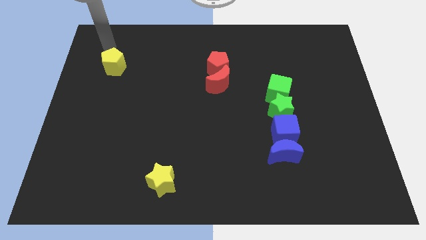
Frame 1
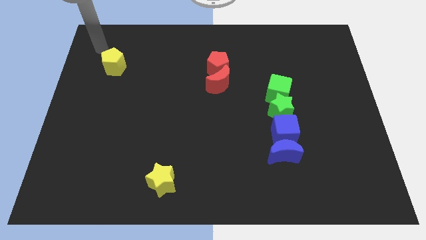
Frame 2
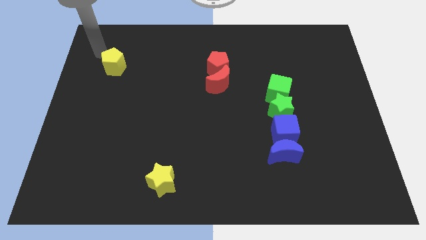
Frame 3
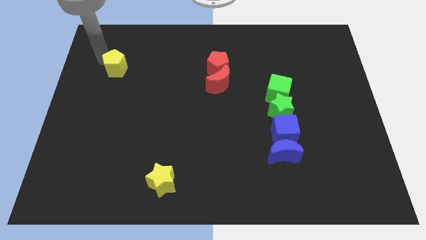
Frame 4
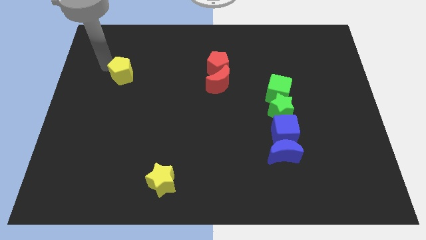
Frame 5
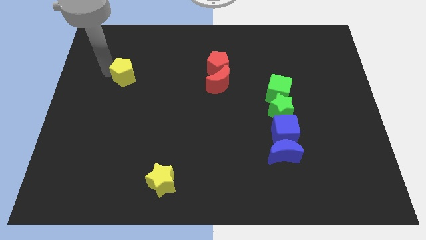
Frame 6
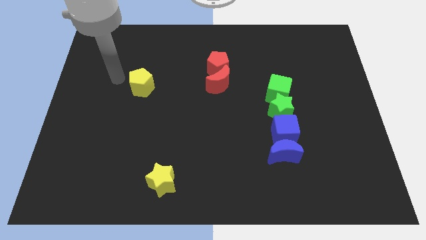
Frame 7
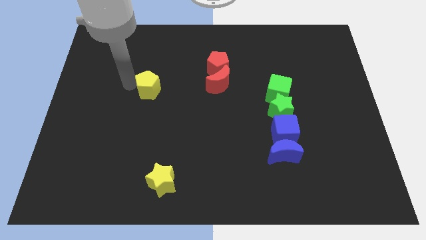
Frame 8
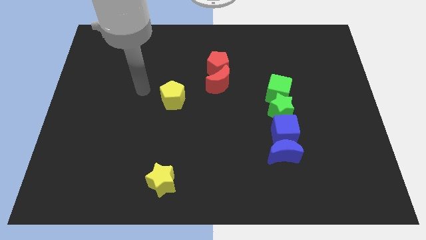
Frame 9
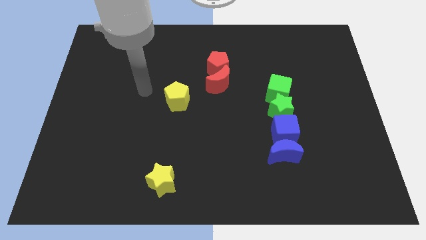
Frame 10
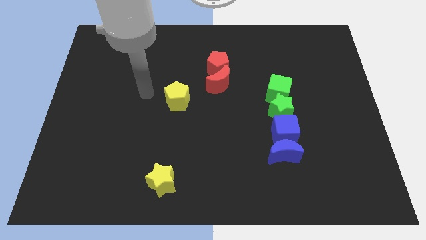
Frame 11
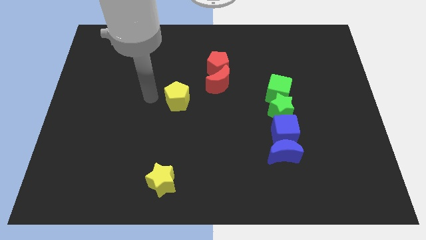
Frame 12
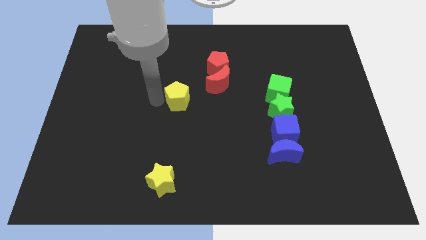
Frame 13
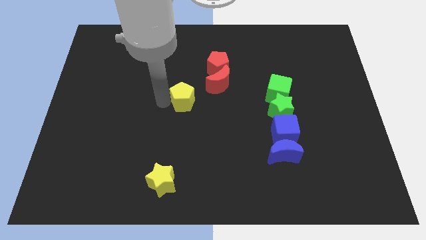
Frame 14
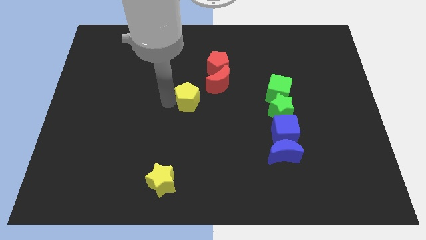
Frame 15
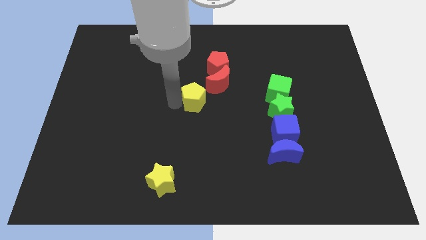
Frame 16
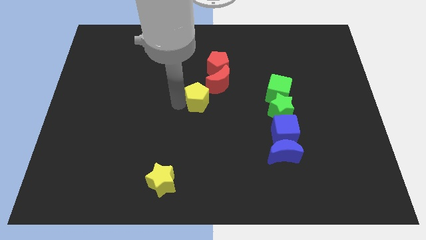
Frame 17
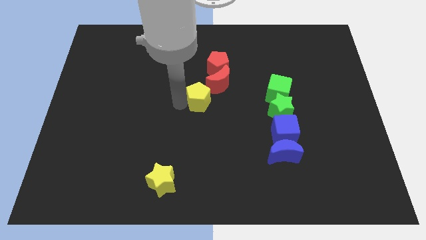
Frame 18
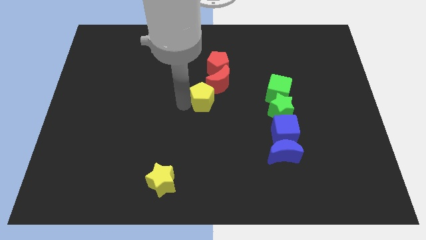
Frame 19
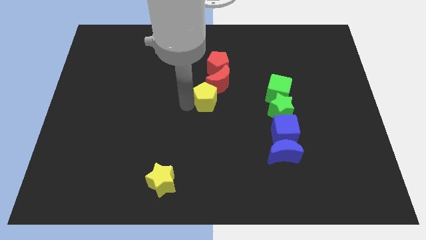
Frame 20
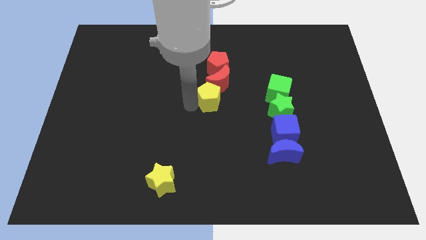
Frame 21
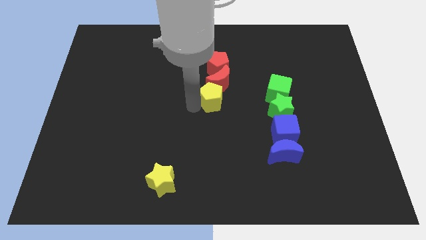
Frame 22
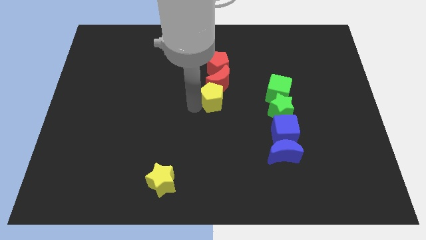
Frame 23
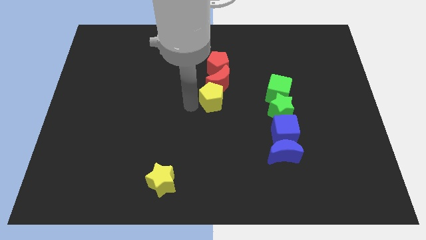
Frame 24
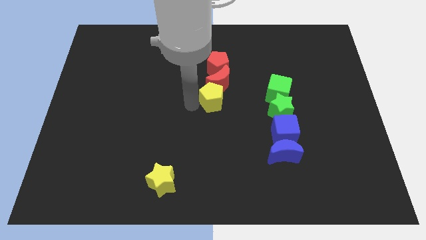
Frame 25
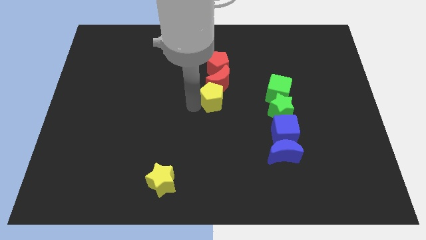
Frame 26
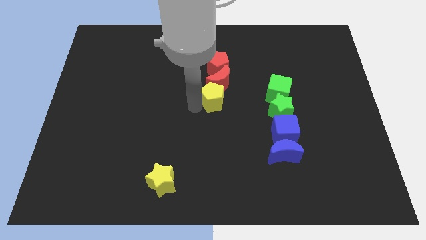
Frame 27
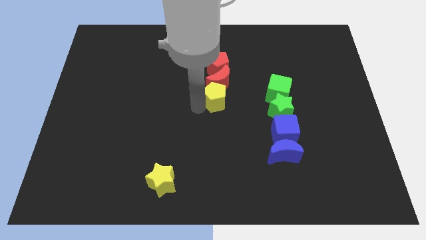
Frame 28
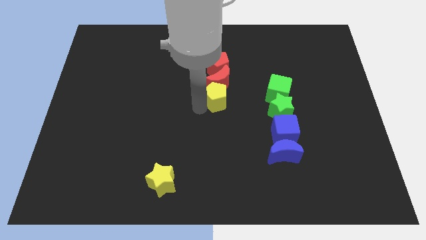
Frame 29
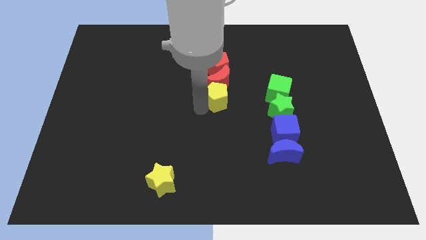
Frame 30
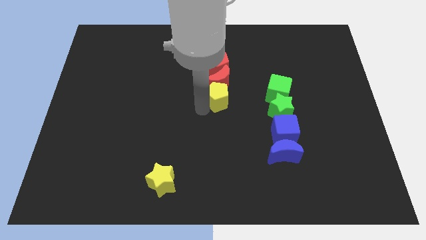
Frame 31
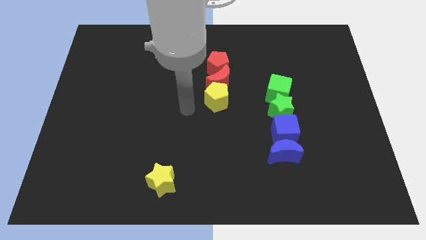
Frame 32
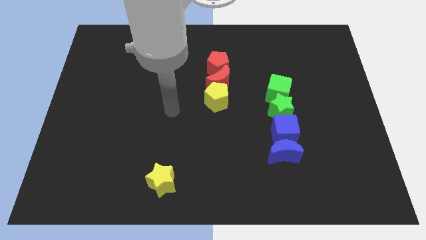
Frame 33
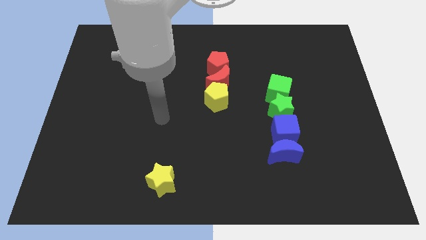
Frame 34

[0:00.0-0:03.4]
move the yellow pentagon to the bottom of the red pentagon

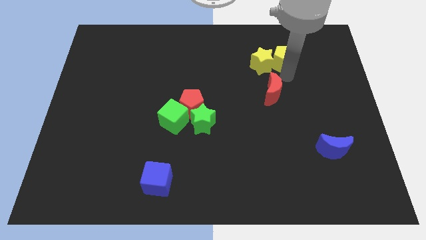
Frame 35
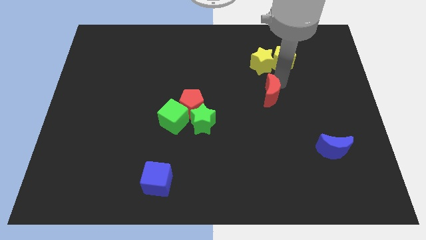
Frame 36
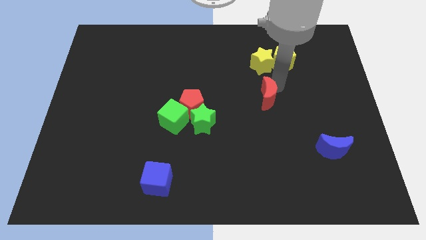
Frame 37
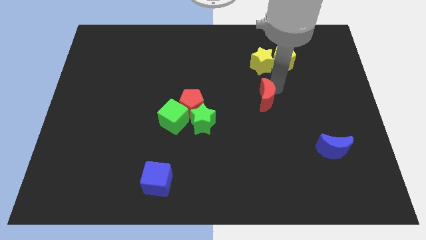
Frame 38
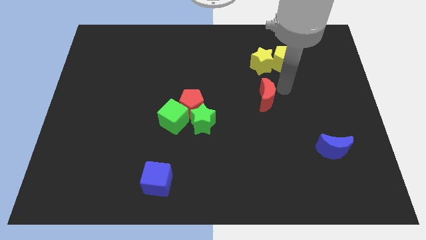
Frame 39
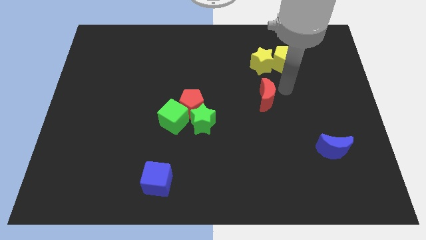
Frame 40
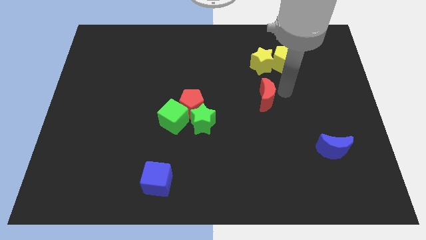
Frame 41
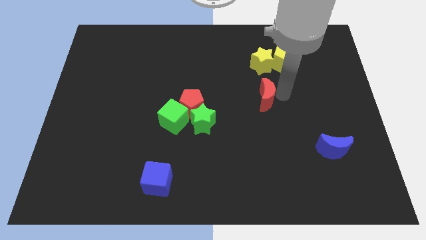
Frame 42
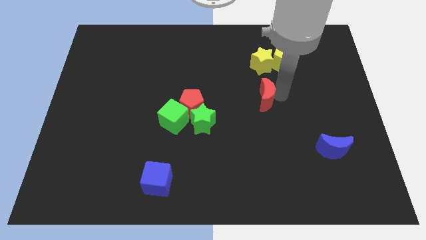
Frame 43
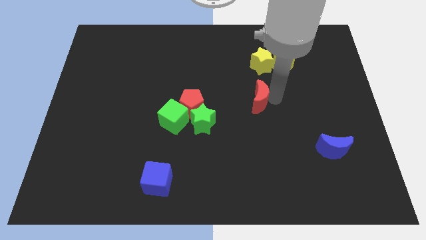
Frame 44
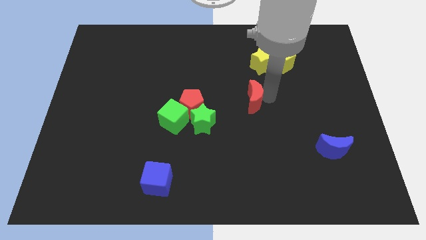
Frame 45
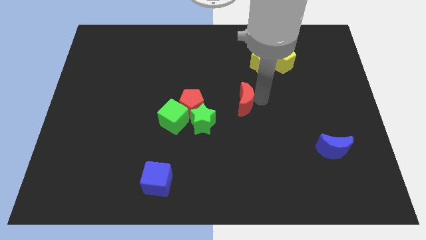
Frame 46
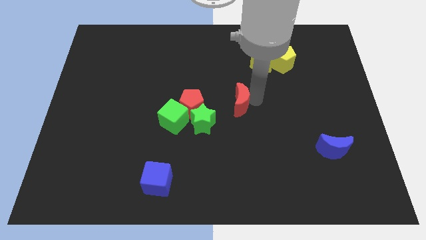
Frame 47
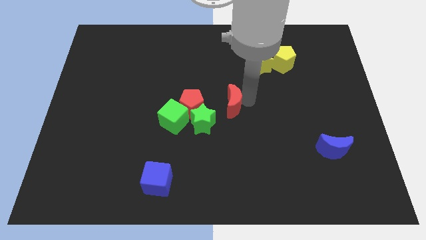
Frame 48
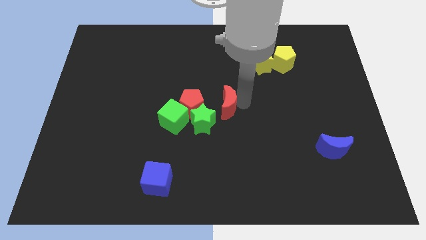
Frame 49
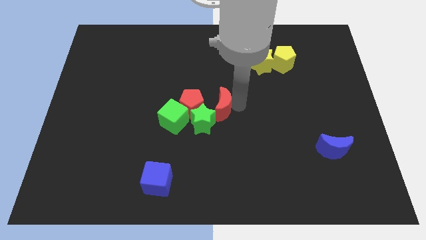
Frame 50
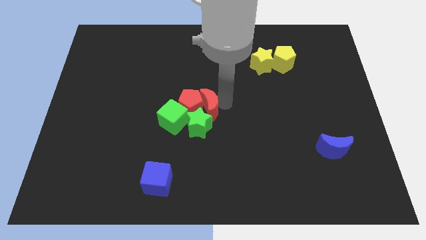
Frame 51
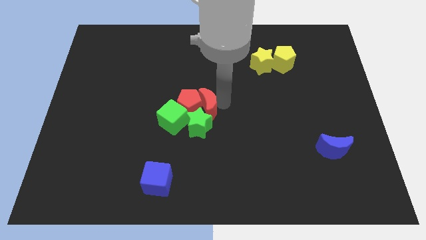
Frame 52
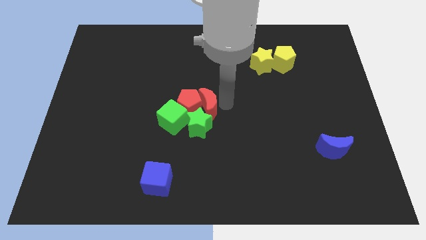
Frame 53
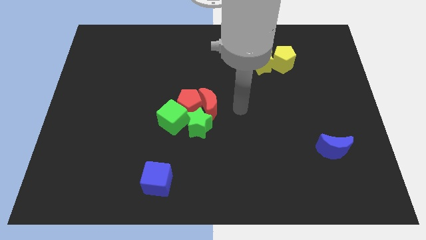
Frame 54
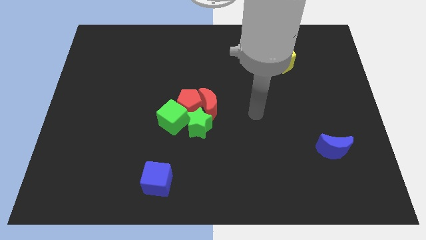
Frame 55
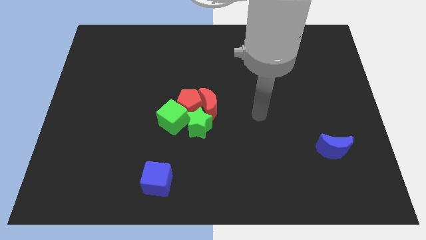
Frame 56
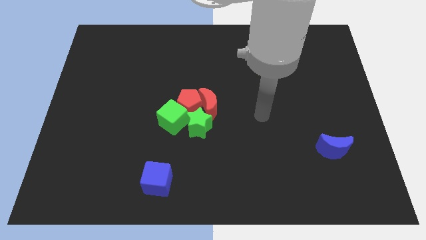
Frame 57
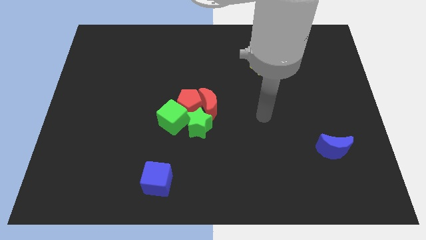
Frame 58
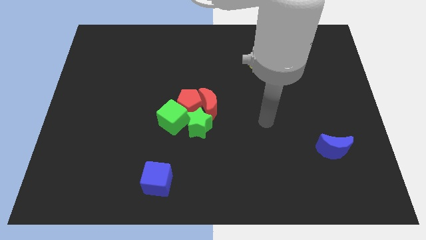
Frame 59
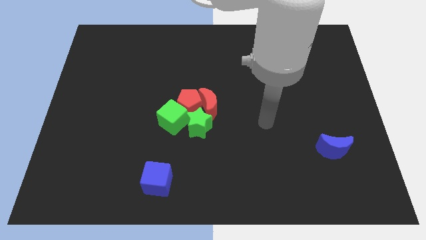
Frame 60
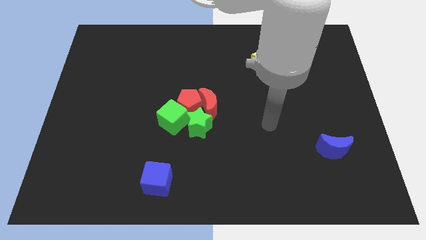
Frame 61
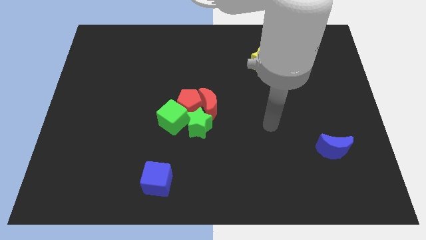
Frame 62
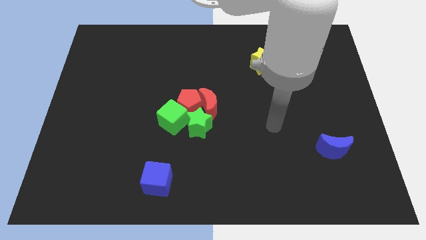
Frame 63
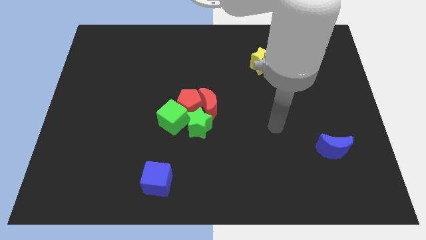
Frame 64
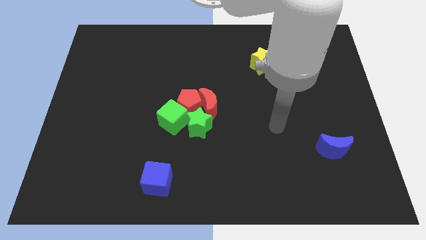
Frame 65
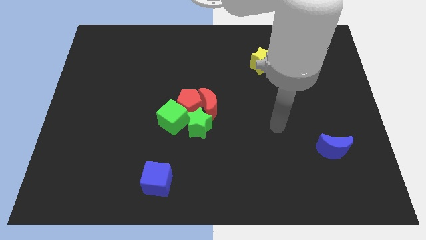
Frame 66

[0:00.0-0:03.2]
push the red moon into red pentagon

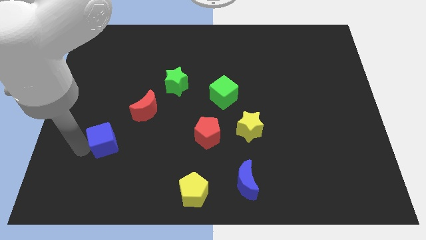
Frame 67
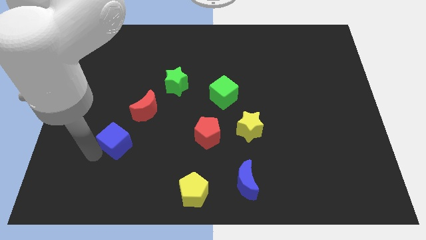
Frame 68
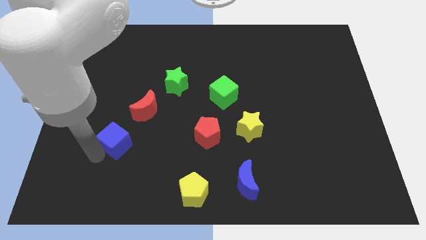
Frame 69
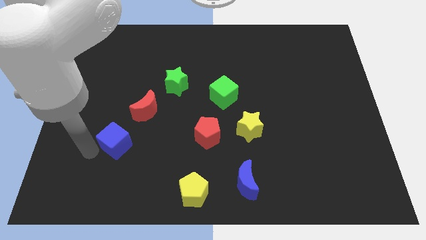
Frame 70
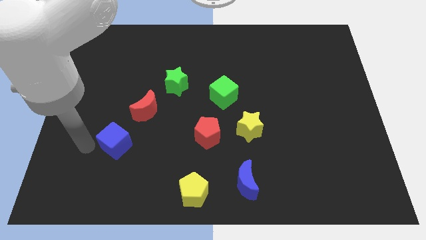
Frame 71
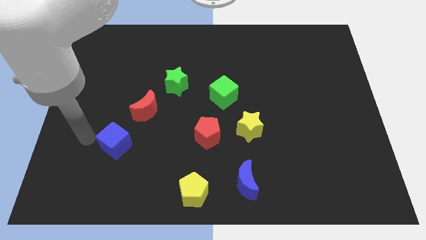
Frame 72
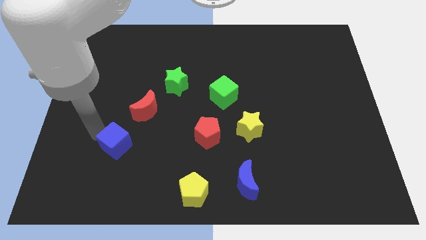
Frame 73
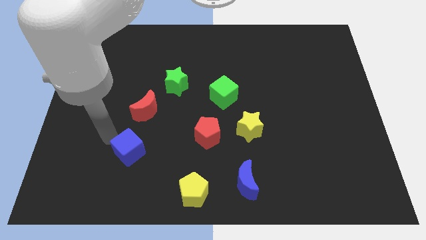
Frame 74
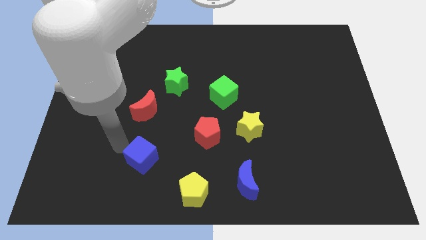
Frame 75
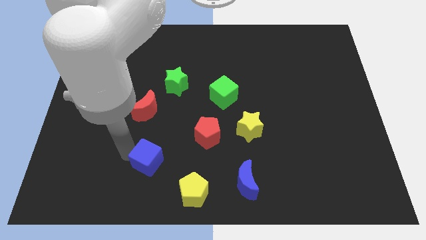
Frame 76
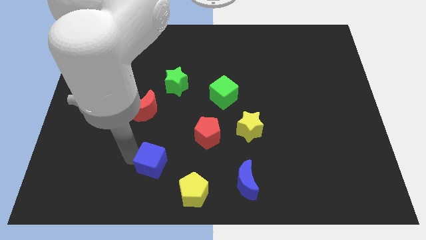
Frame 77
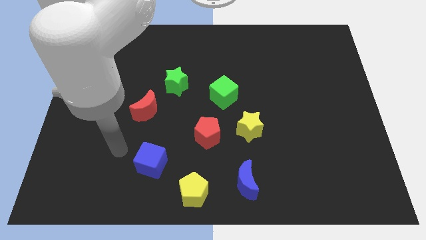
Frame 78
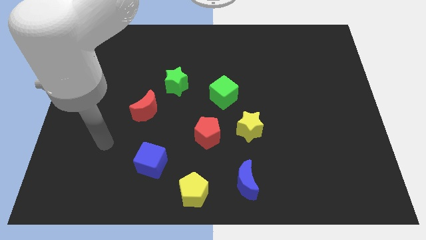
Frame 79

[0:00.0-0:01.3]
place blue cube below red crescent

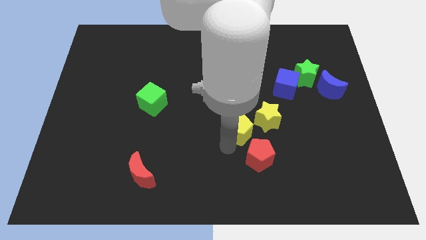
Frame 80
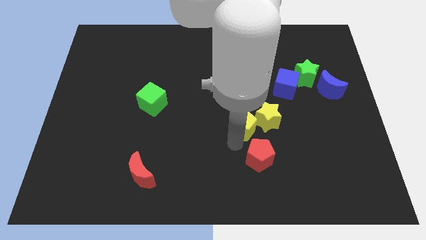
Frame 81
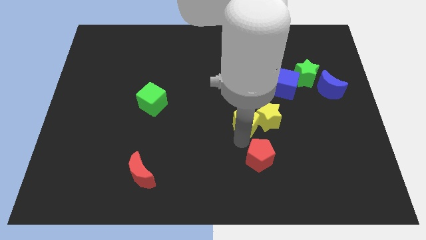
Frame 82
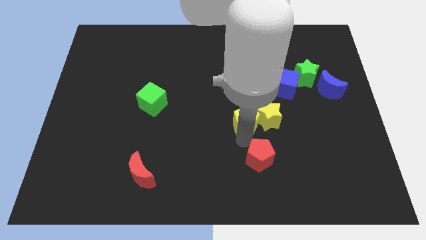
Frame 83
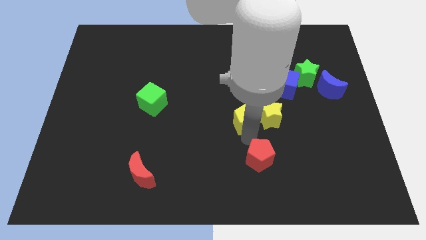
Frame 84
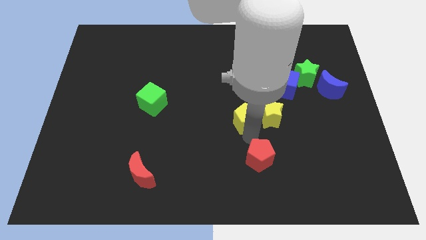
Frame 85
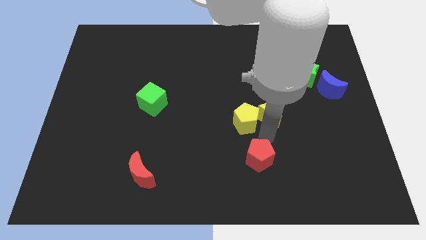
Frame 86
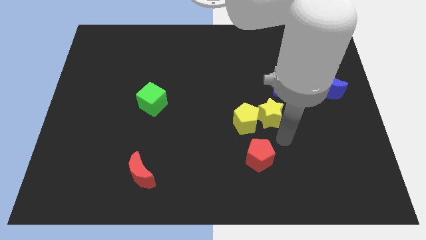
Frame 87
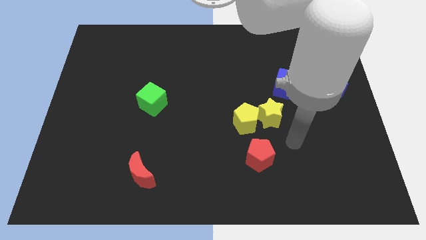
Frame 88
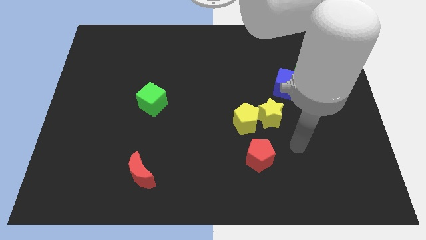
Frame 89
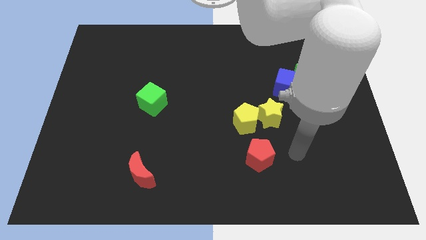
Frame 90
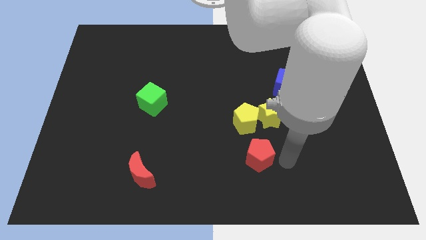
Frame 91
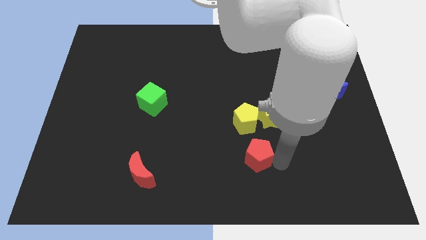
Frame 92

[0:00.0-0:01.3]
place your arm right to the red pentagon
